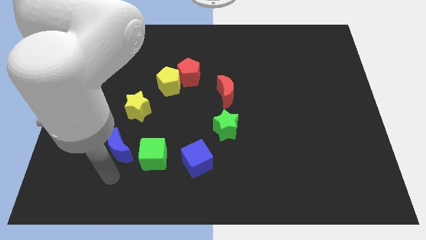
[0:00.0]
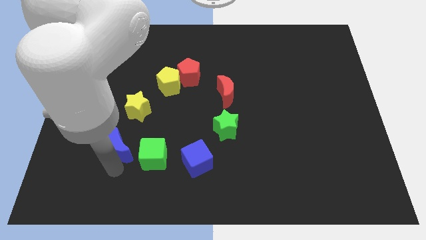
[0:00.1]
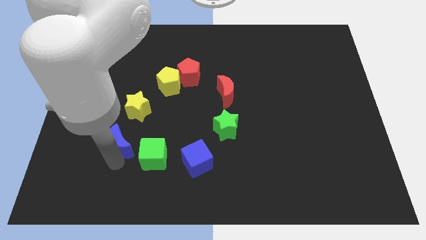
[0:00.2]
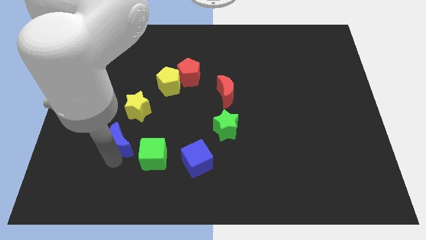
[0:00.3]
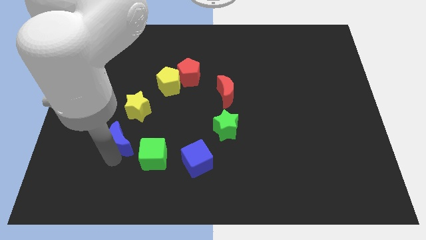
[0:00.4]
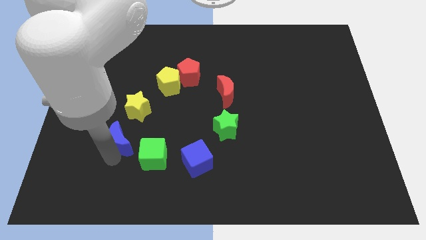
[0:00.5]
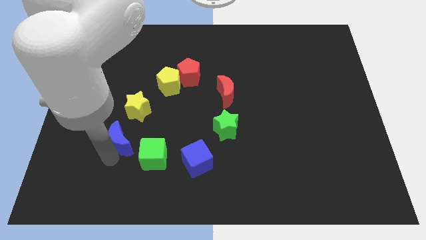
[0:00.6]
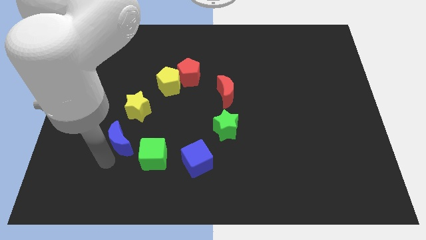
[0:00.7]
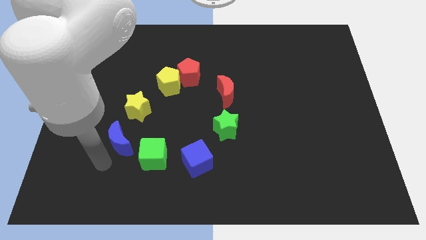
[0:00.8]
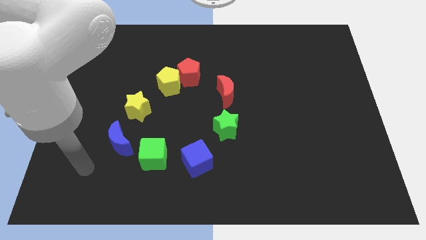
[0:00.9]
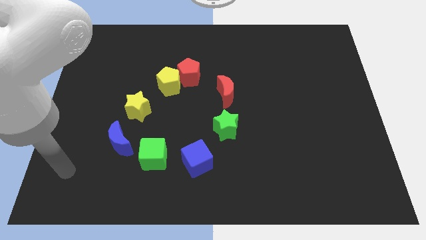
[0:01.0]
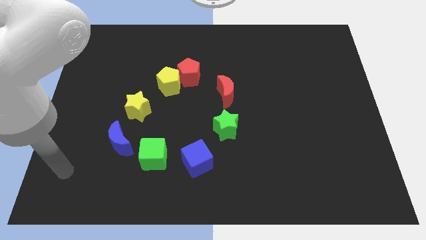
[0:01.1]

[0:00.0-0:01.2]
move your arm slightly bottom left to the board

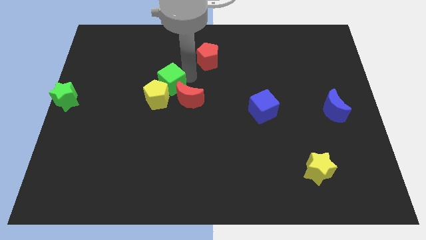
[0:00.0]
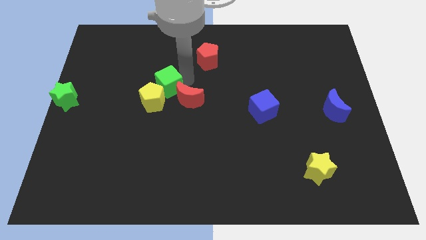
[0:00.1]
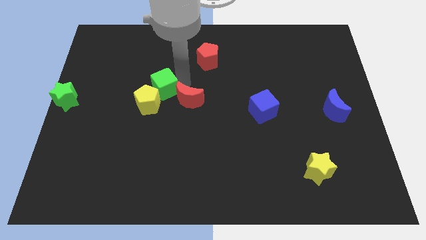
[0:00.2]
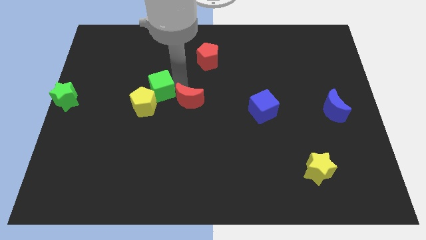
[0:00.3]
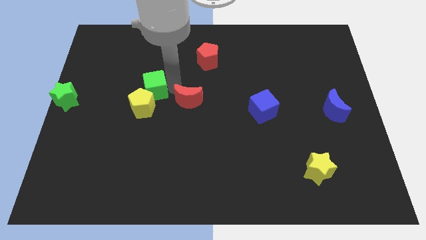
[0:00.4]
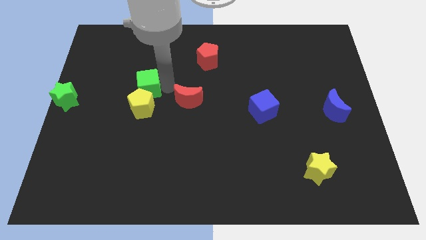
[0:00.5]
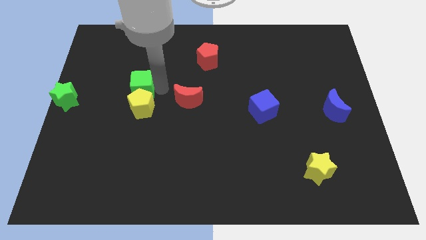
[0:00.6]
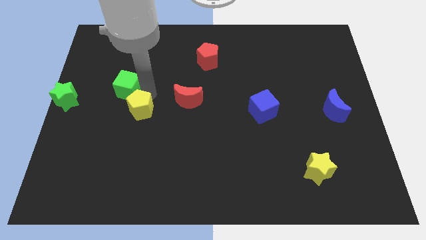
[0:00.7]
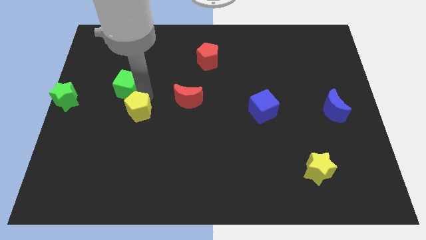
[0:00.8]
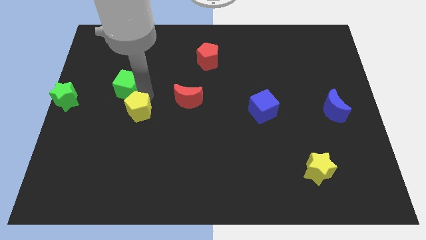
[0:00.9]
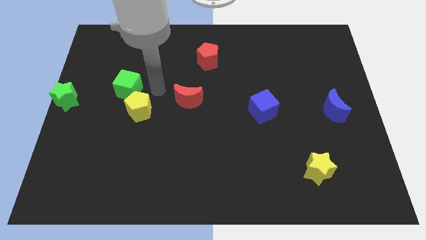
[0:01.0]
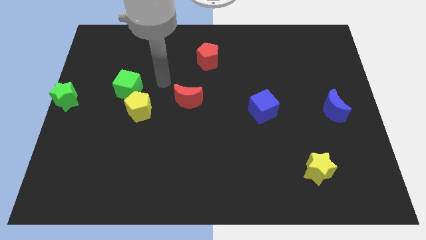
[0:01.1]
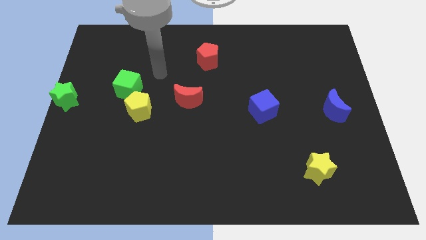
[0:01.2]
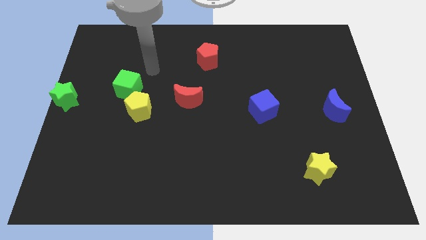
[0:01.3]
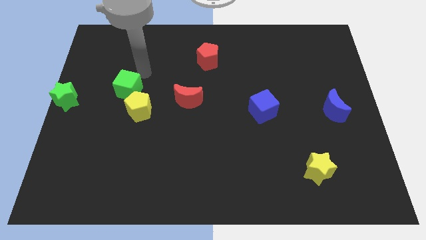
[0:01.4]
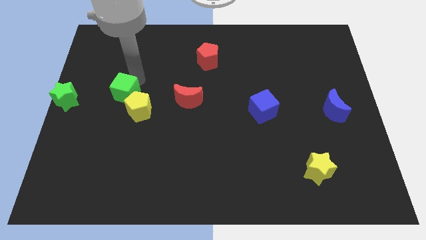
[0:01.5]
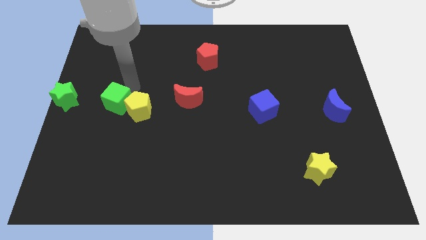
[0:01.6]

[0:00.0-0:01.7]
place green cube to the left of yellow pentagon

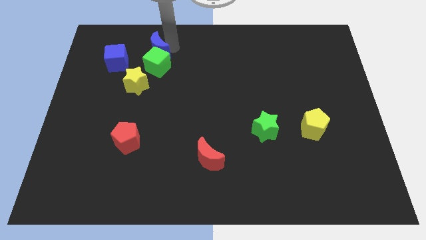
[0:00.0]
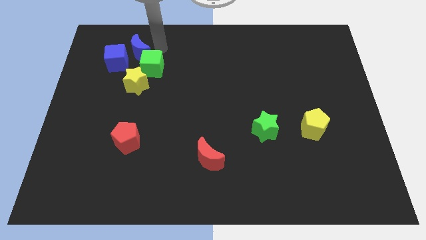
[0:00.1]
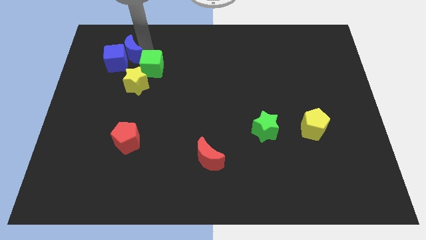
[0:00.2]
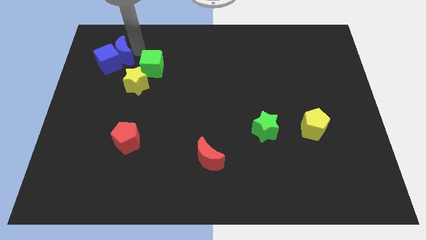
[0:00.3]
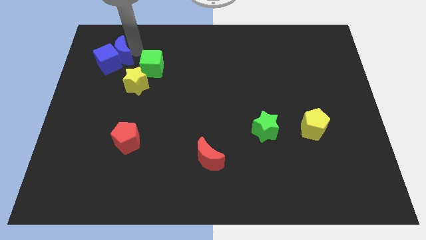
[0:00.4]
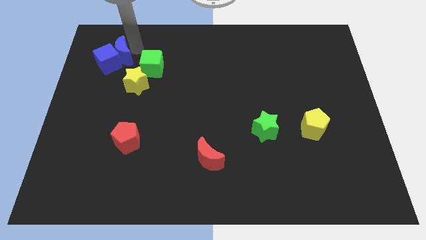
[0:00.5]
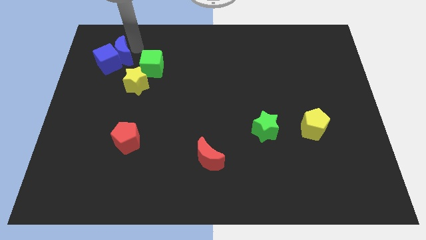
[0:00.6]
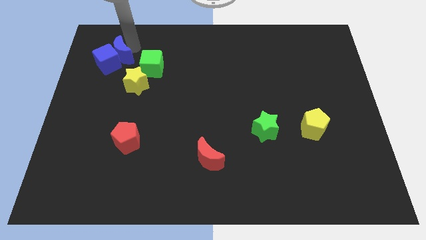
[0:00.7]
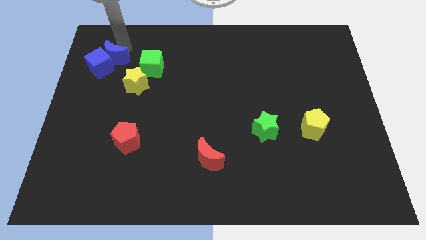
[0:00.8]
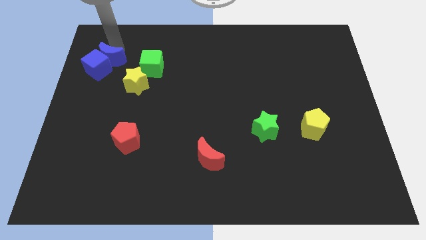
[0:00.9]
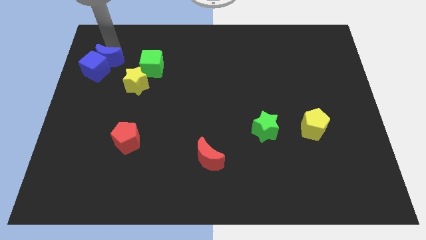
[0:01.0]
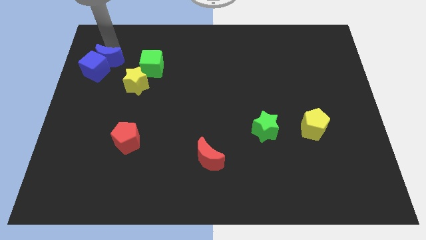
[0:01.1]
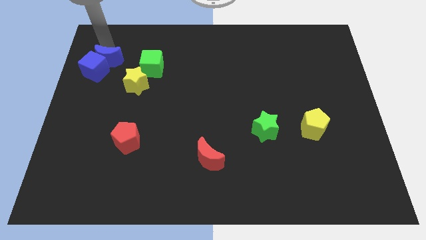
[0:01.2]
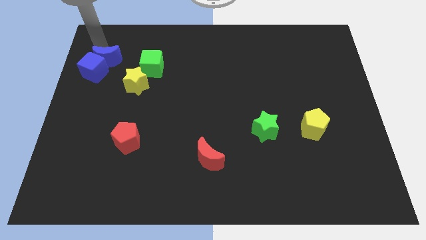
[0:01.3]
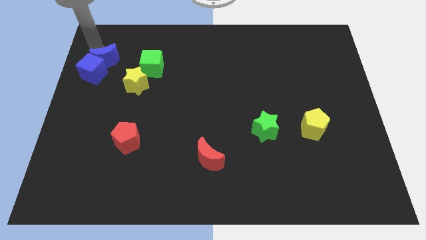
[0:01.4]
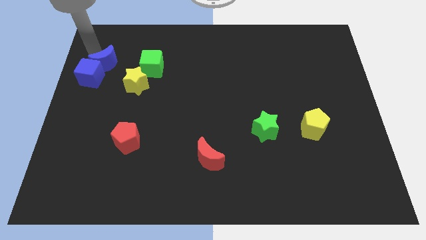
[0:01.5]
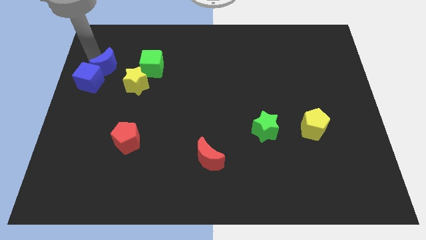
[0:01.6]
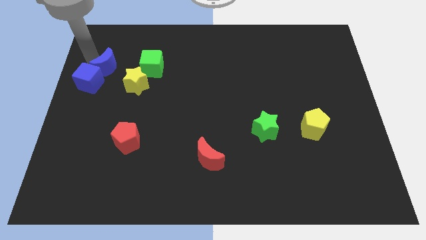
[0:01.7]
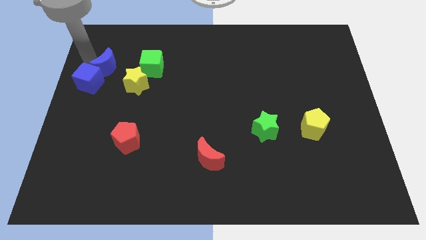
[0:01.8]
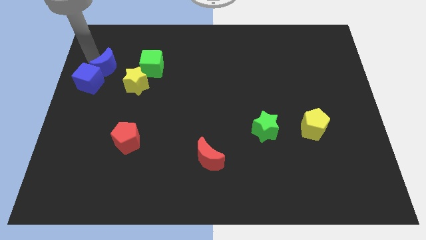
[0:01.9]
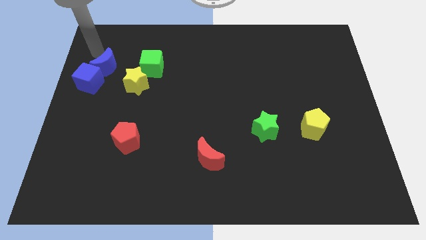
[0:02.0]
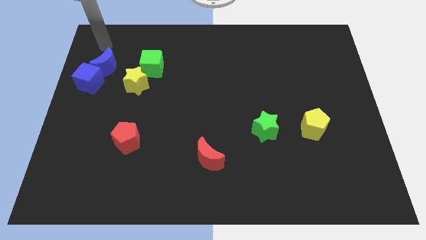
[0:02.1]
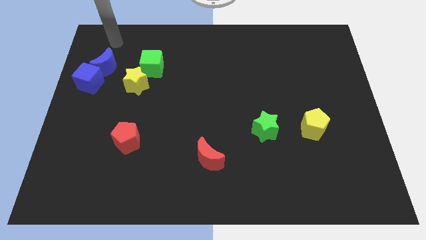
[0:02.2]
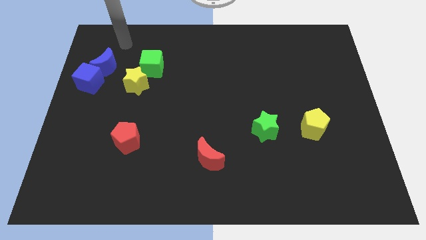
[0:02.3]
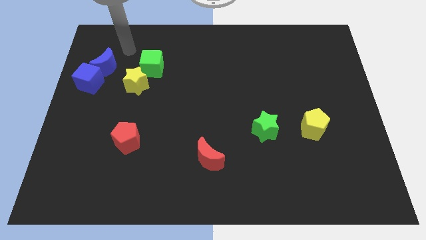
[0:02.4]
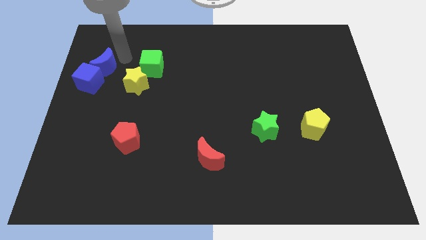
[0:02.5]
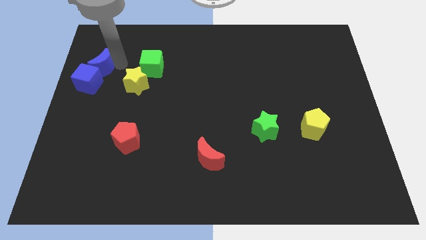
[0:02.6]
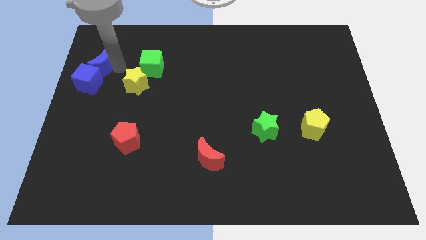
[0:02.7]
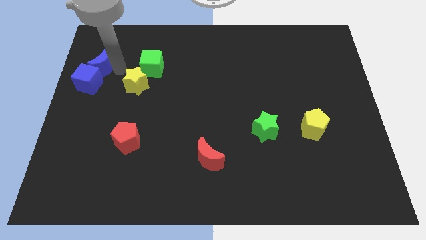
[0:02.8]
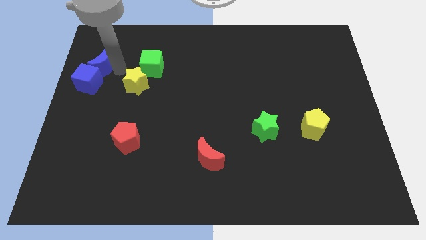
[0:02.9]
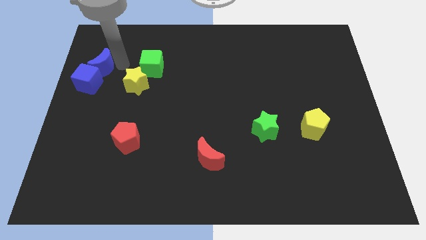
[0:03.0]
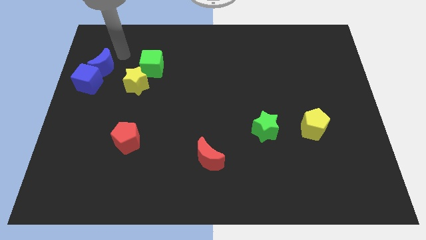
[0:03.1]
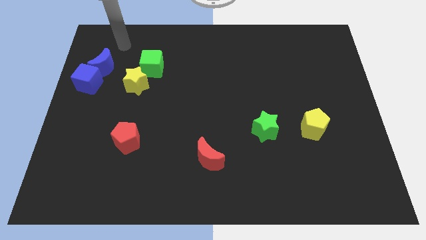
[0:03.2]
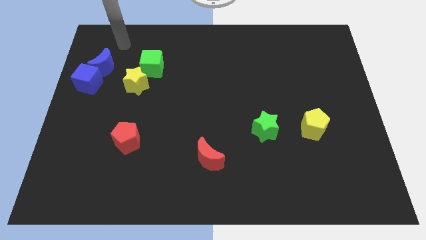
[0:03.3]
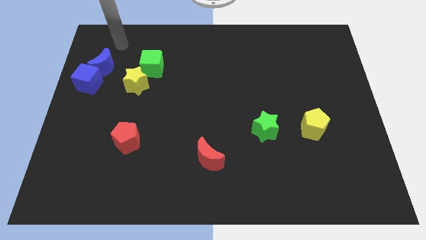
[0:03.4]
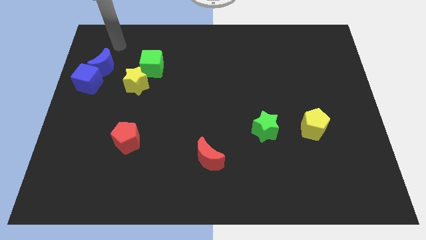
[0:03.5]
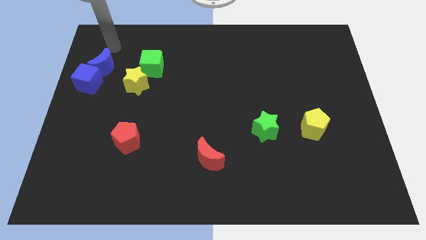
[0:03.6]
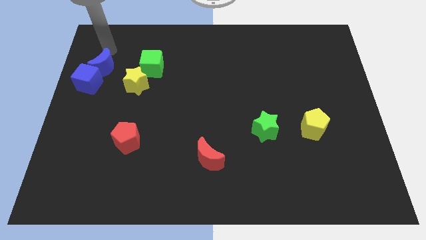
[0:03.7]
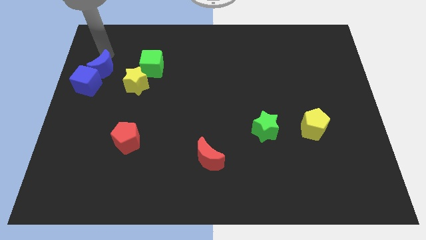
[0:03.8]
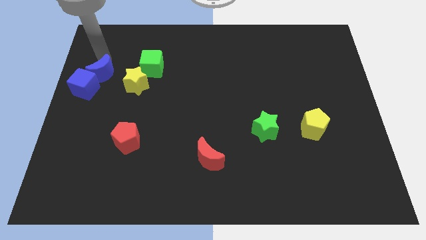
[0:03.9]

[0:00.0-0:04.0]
push the blue moon towards the blue cube which is at left

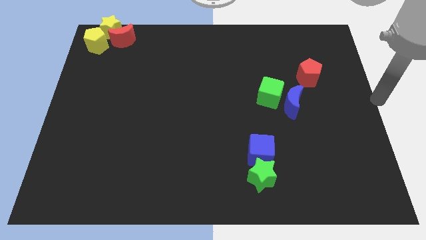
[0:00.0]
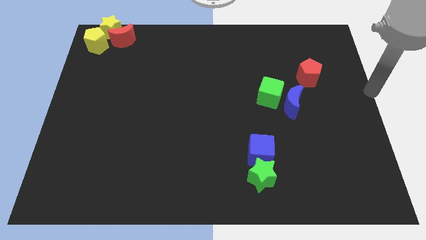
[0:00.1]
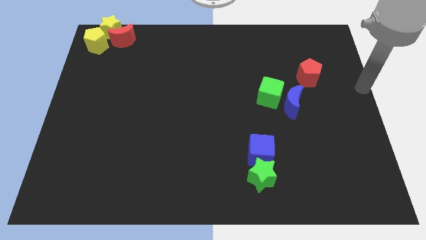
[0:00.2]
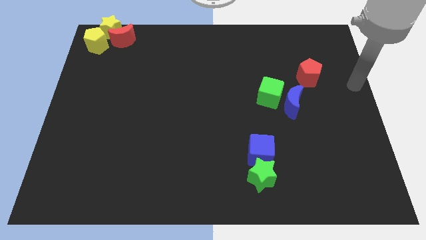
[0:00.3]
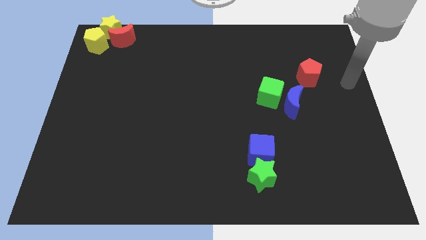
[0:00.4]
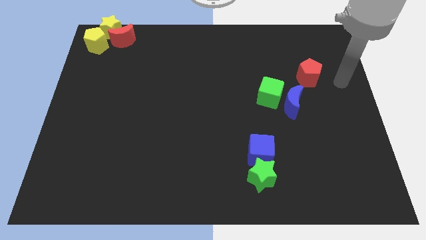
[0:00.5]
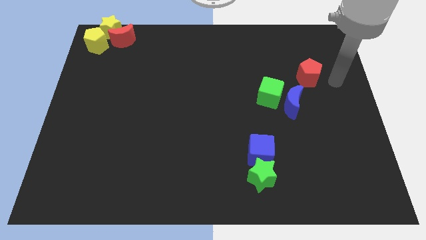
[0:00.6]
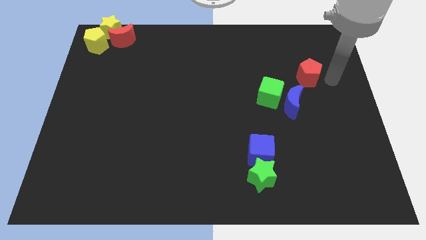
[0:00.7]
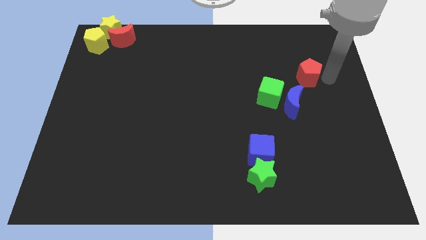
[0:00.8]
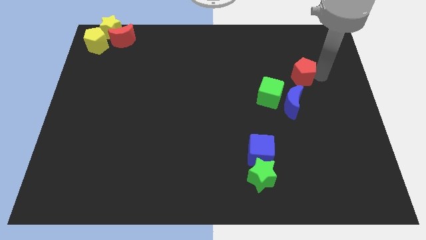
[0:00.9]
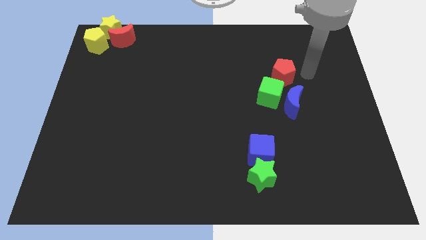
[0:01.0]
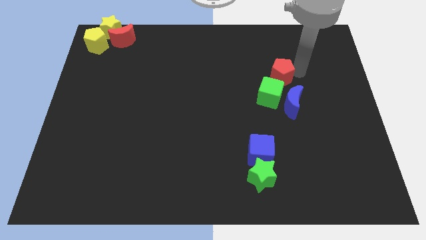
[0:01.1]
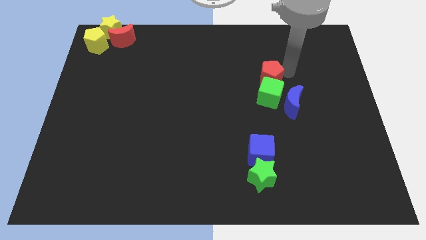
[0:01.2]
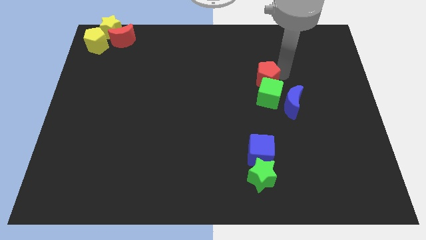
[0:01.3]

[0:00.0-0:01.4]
place the red pentagon above the green cube

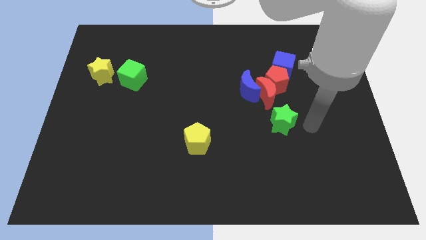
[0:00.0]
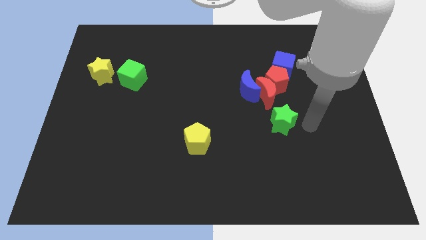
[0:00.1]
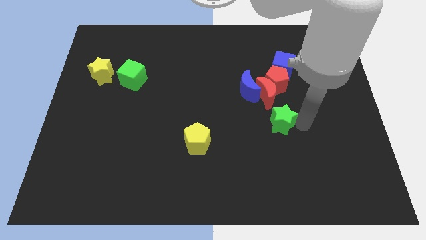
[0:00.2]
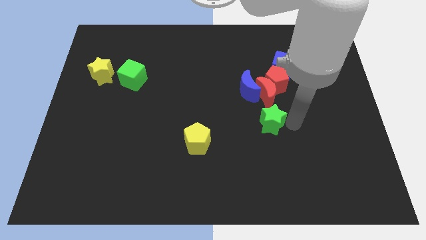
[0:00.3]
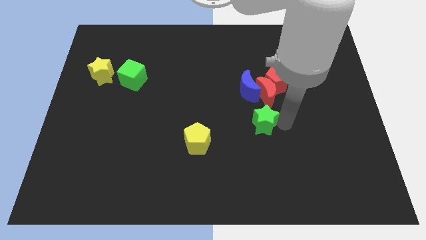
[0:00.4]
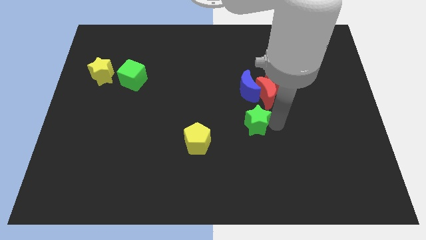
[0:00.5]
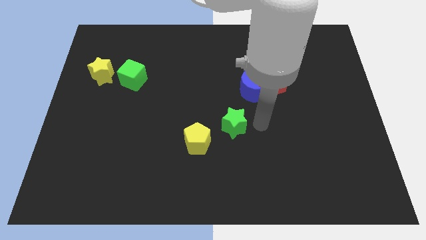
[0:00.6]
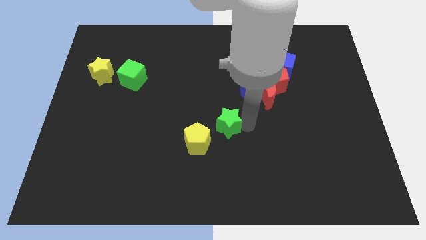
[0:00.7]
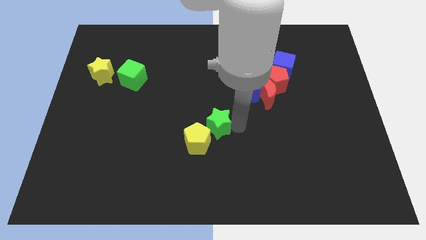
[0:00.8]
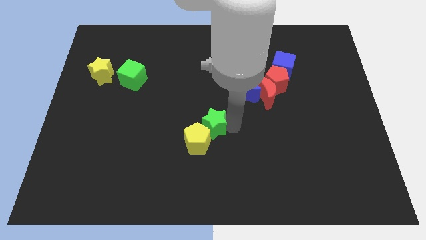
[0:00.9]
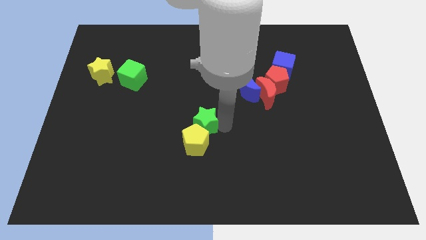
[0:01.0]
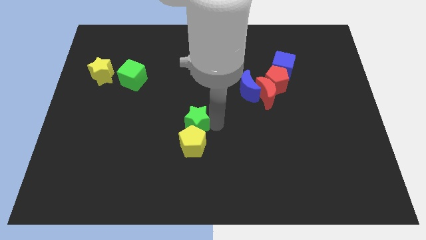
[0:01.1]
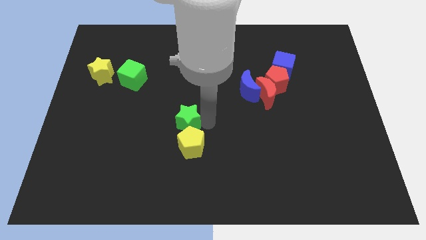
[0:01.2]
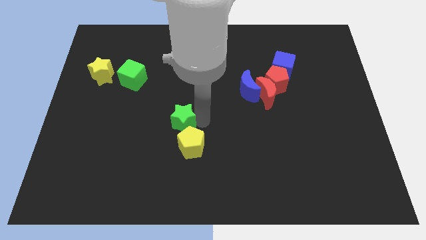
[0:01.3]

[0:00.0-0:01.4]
push the green star into the yellow pentagon
